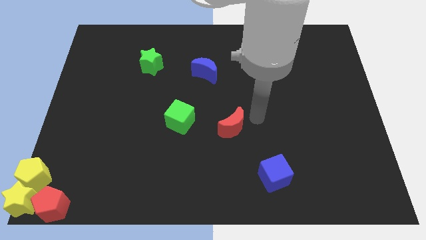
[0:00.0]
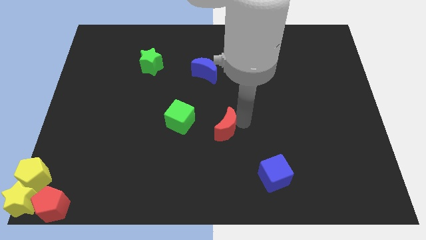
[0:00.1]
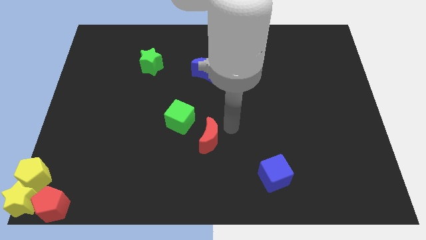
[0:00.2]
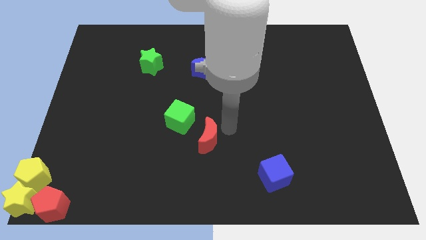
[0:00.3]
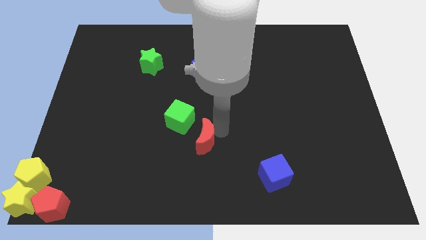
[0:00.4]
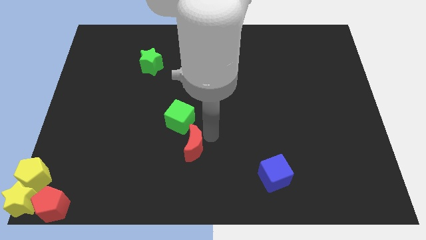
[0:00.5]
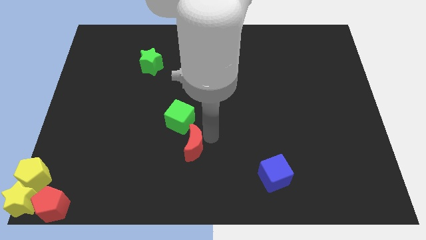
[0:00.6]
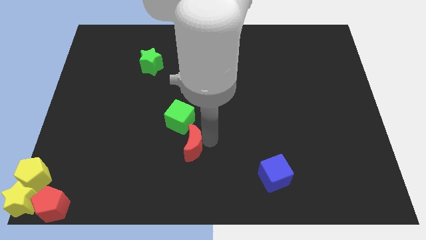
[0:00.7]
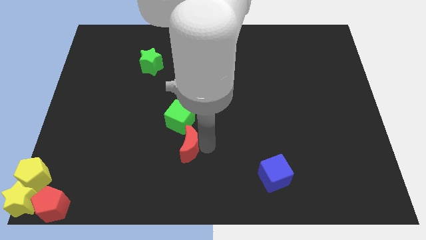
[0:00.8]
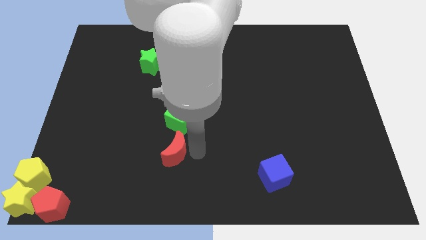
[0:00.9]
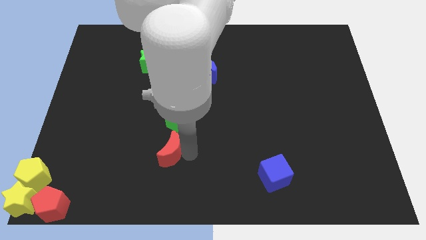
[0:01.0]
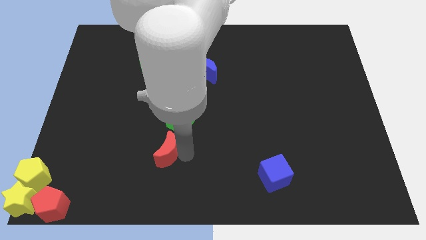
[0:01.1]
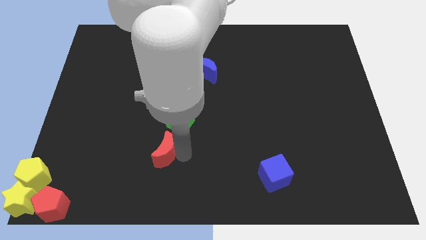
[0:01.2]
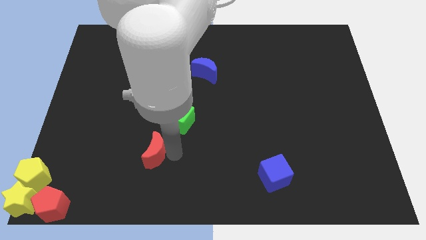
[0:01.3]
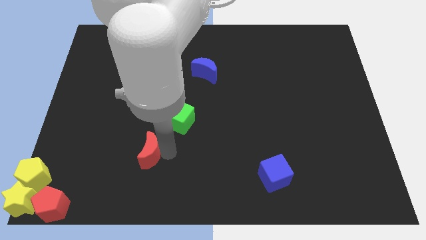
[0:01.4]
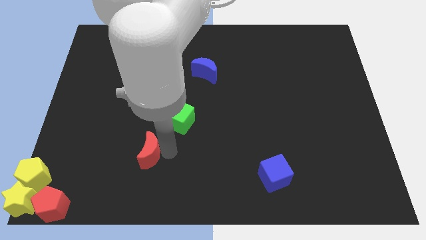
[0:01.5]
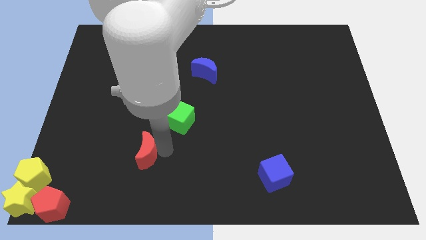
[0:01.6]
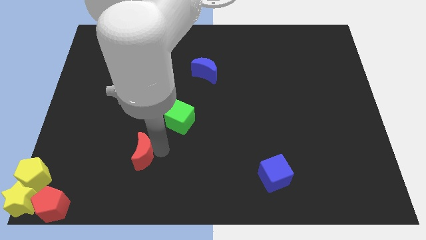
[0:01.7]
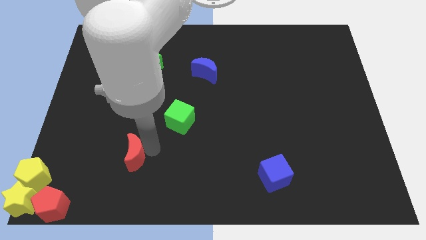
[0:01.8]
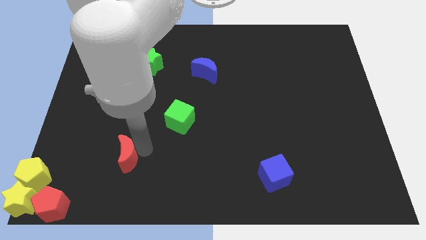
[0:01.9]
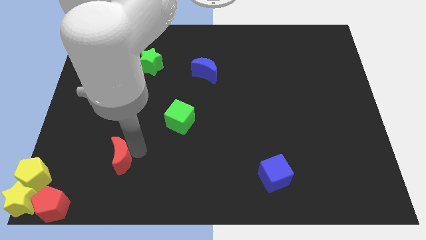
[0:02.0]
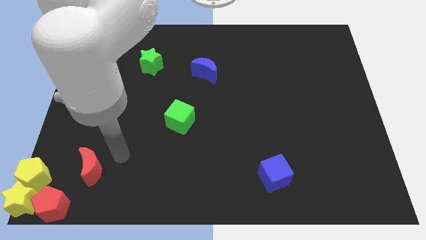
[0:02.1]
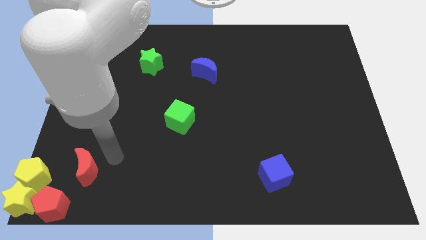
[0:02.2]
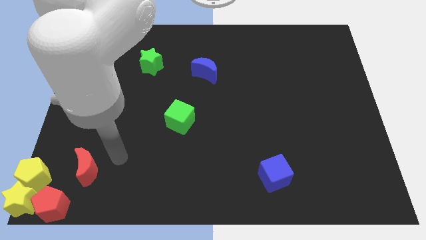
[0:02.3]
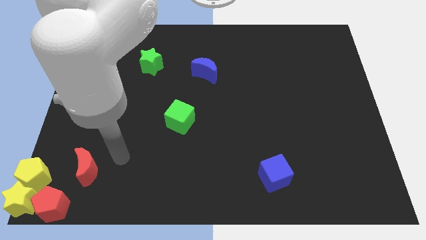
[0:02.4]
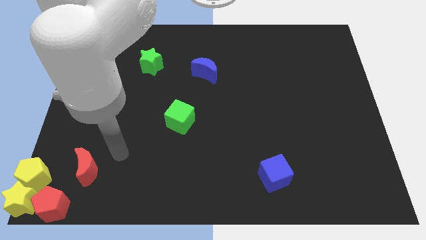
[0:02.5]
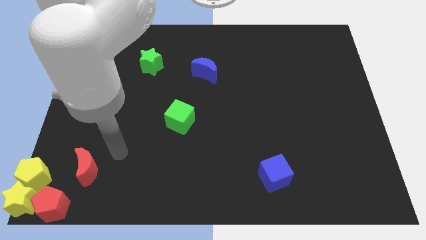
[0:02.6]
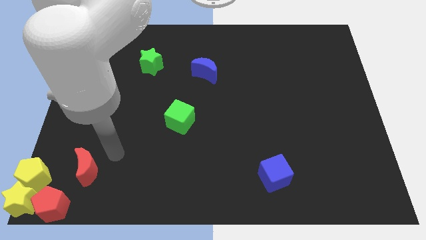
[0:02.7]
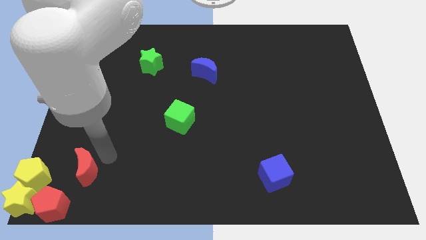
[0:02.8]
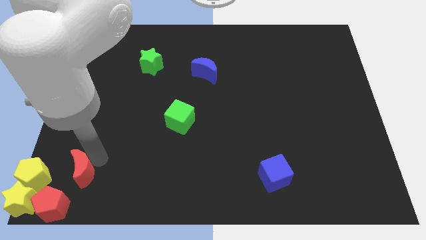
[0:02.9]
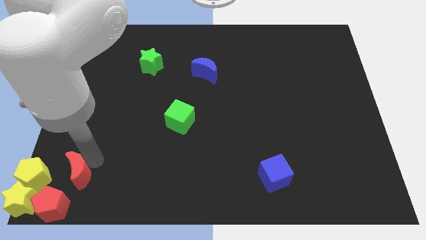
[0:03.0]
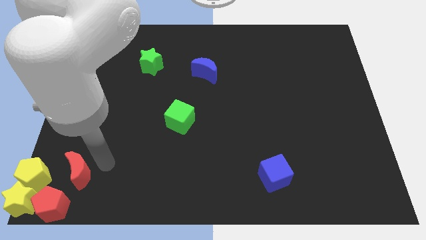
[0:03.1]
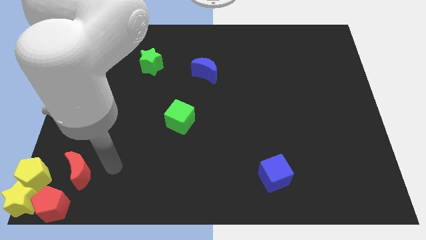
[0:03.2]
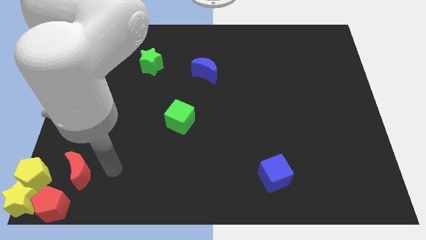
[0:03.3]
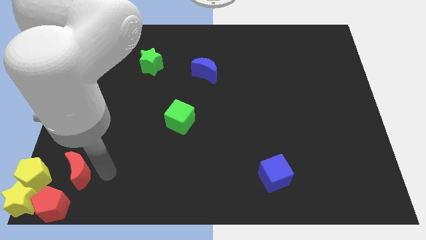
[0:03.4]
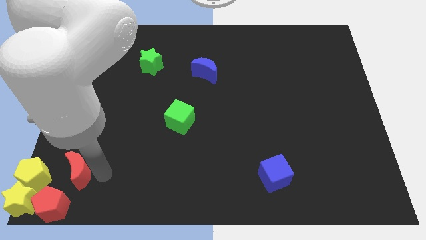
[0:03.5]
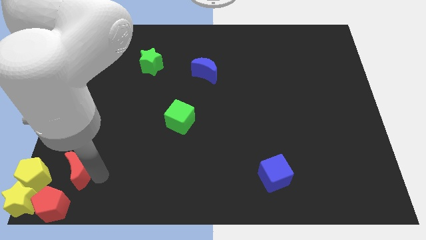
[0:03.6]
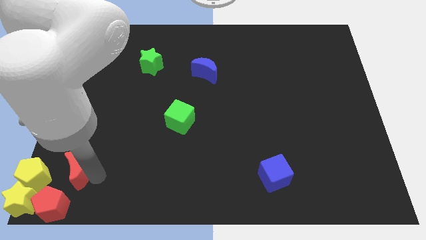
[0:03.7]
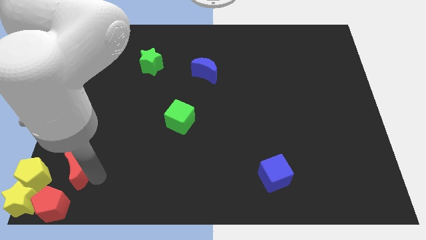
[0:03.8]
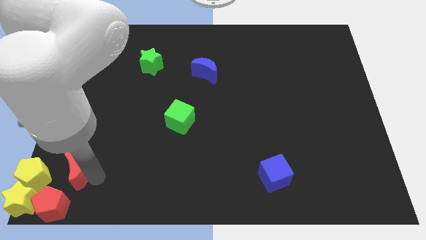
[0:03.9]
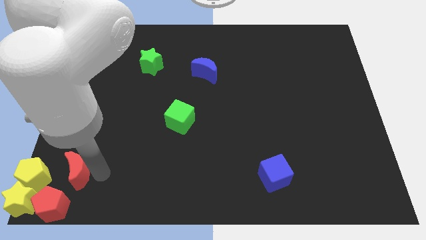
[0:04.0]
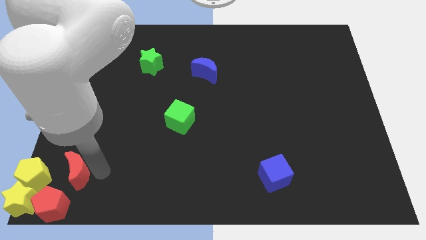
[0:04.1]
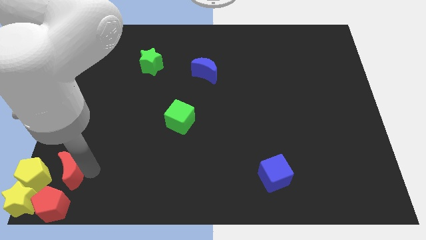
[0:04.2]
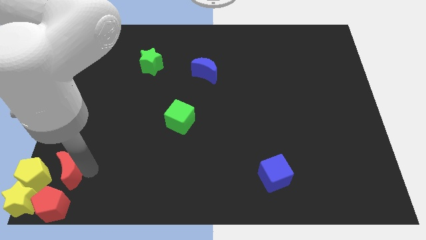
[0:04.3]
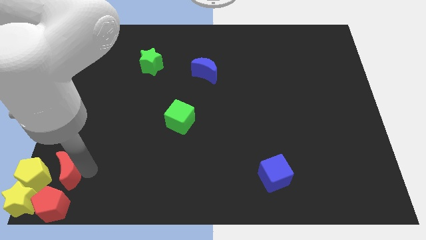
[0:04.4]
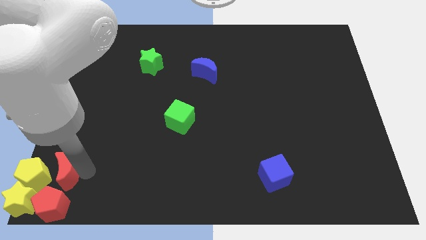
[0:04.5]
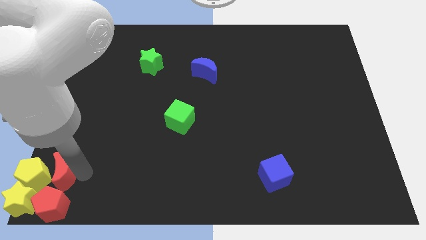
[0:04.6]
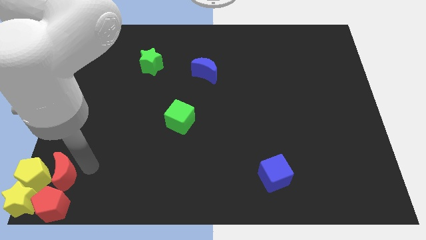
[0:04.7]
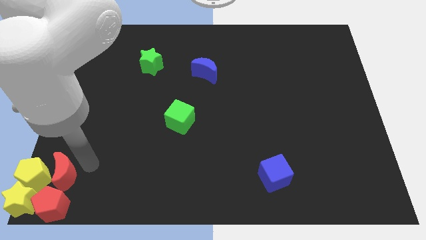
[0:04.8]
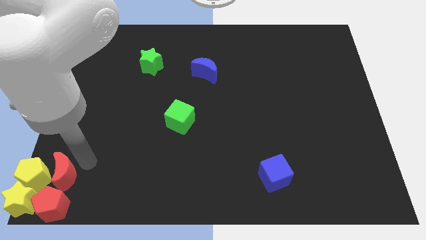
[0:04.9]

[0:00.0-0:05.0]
push the red crescent to the top of the red pentagon

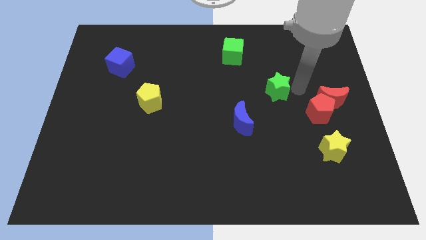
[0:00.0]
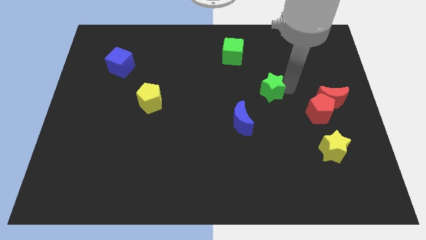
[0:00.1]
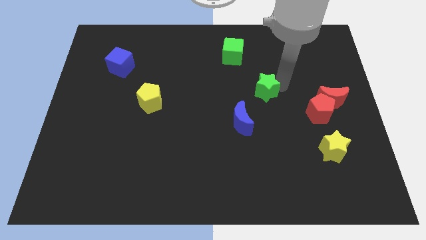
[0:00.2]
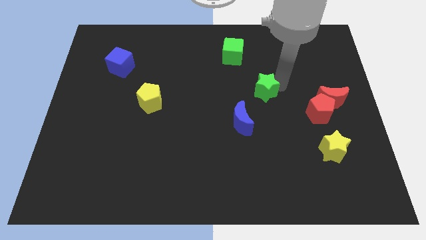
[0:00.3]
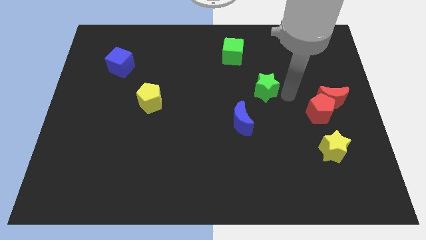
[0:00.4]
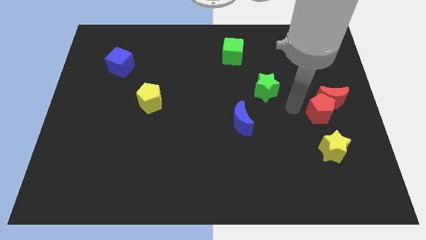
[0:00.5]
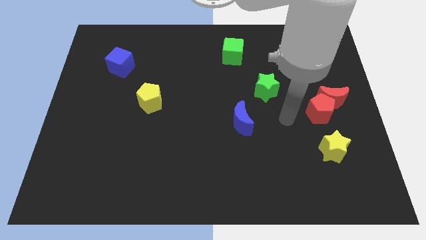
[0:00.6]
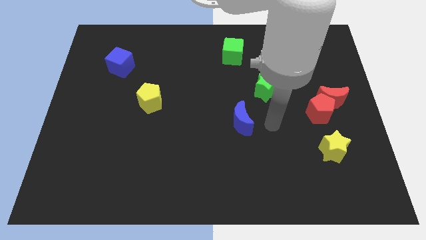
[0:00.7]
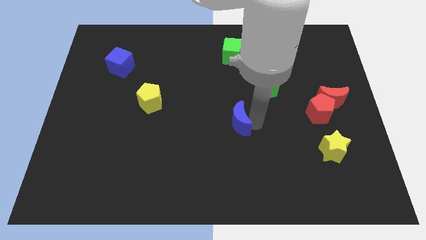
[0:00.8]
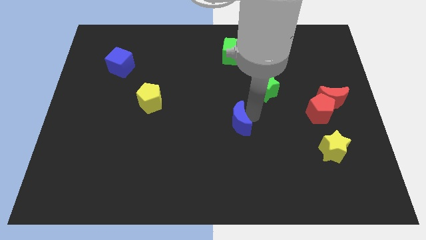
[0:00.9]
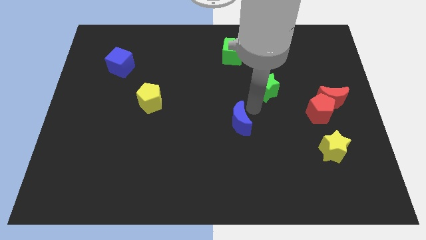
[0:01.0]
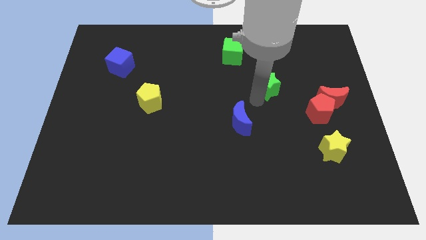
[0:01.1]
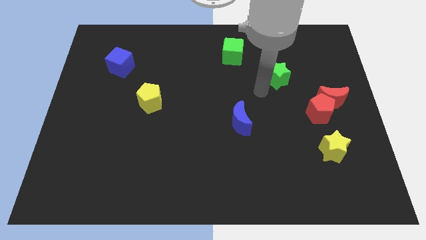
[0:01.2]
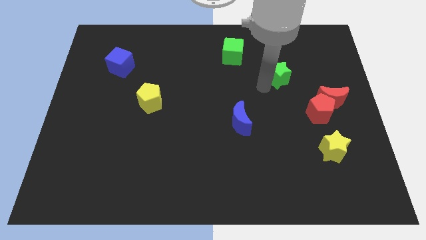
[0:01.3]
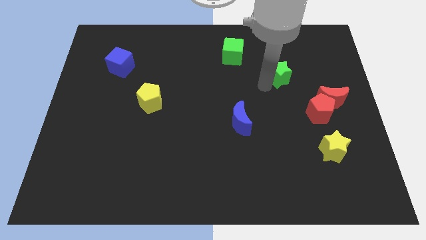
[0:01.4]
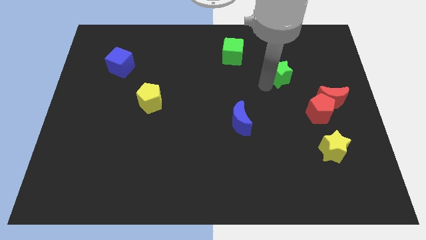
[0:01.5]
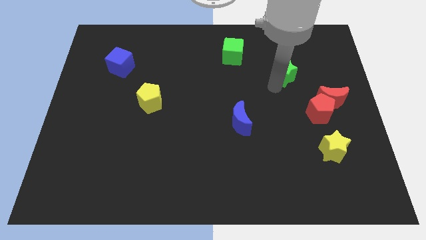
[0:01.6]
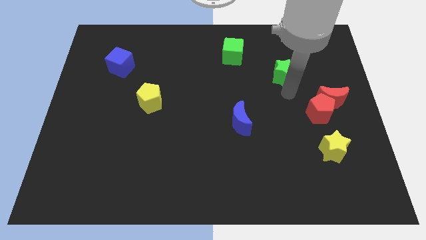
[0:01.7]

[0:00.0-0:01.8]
move the green star slightly towards upwards of the board

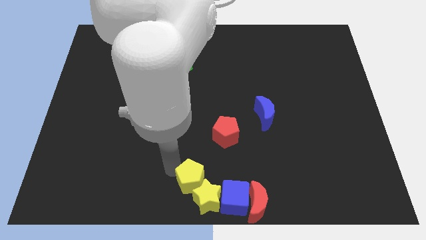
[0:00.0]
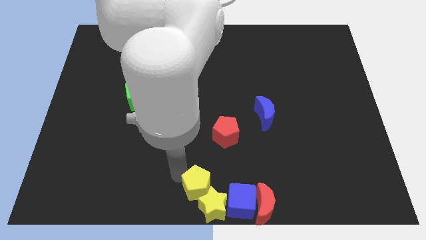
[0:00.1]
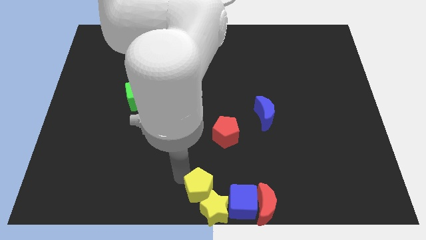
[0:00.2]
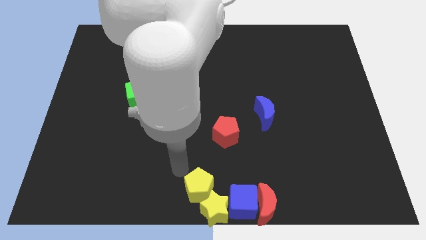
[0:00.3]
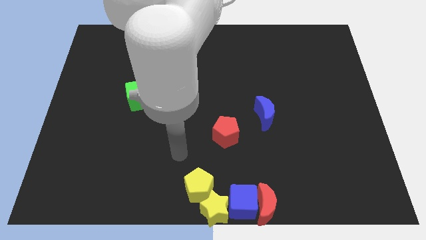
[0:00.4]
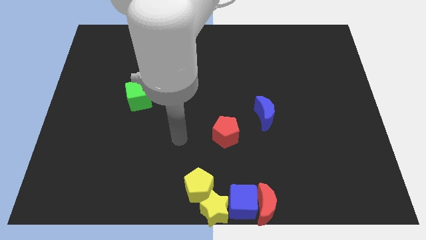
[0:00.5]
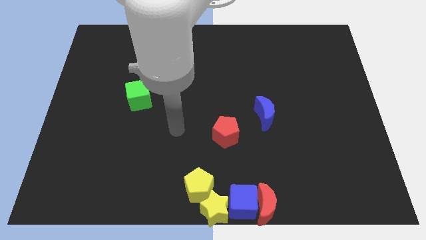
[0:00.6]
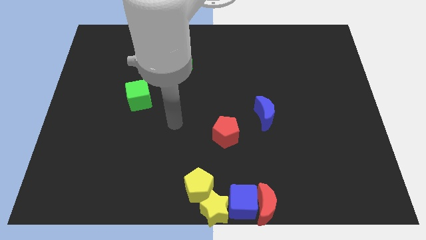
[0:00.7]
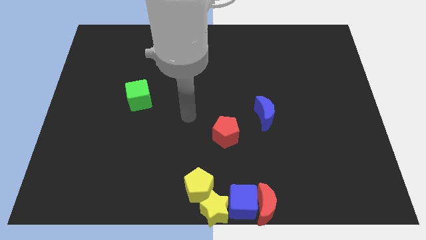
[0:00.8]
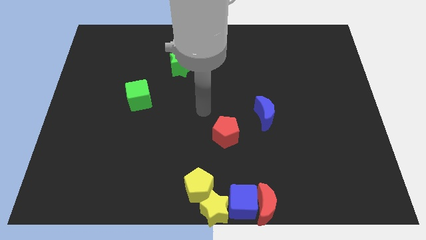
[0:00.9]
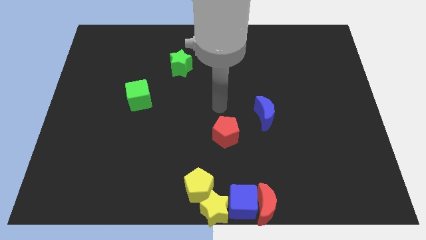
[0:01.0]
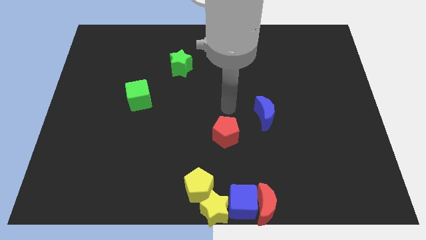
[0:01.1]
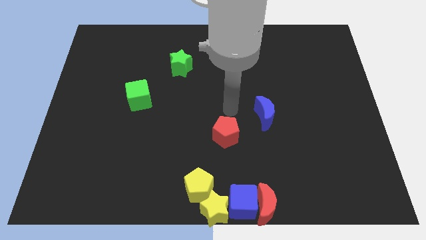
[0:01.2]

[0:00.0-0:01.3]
move your arm away from yellow pentagon

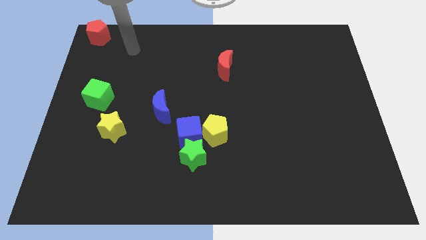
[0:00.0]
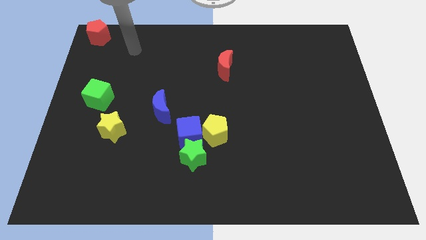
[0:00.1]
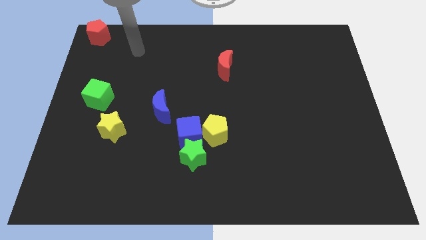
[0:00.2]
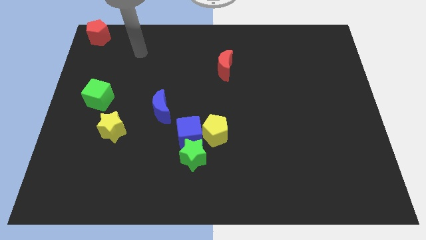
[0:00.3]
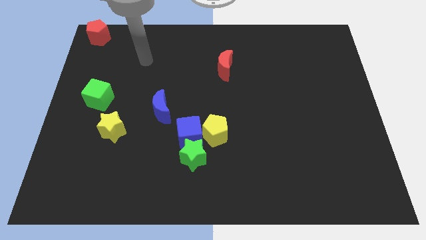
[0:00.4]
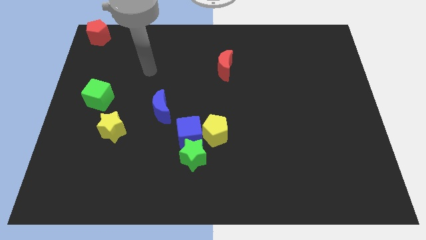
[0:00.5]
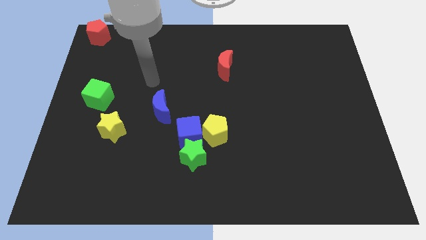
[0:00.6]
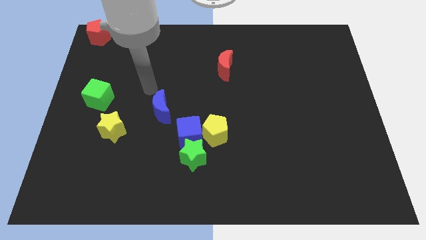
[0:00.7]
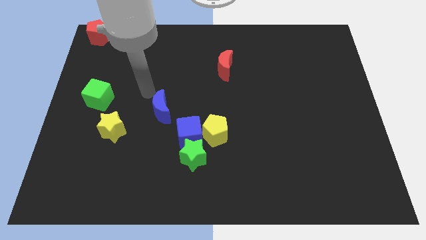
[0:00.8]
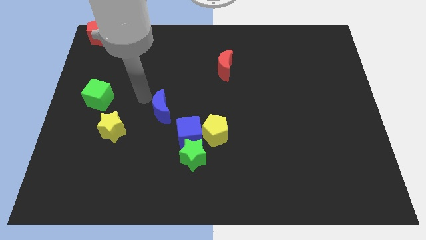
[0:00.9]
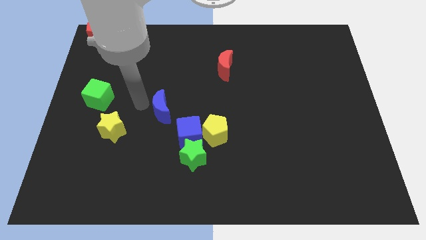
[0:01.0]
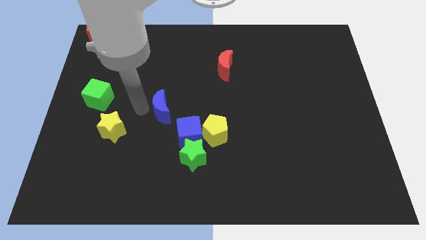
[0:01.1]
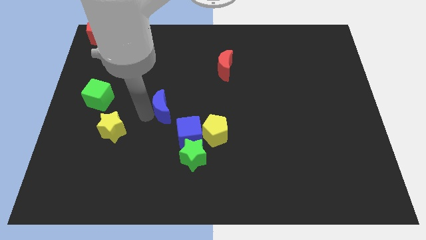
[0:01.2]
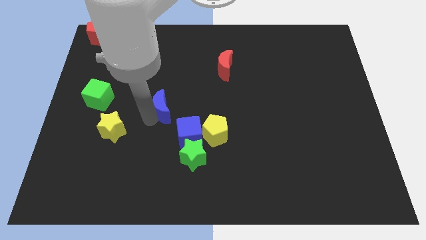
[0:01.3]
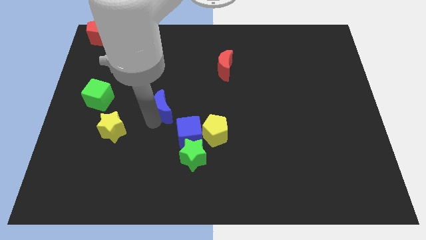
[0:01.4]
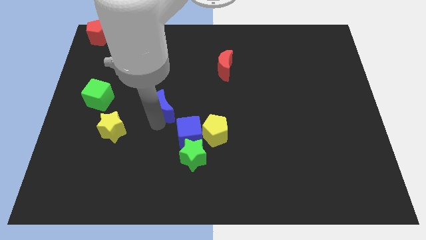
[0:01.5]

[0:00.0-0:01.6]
place your arm below blue moon
